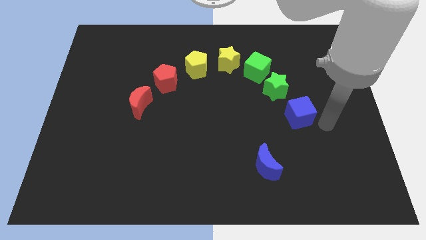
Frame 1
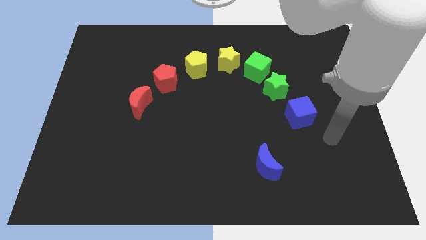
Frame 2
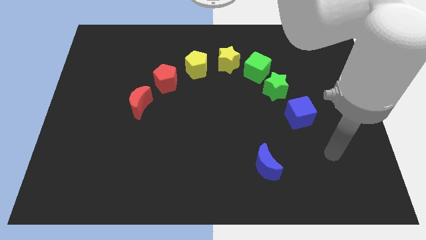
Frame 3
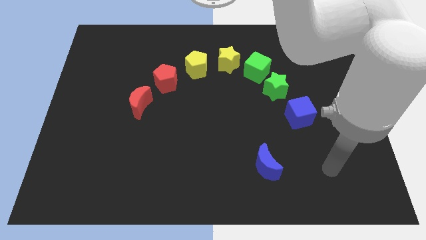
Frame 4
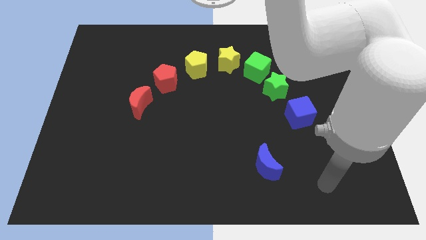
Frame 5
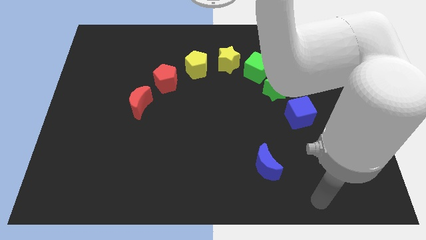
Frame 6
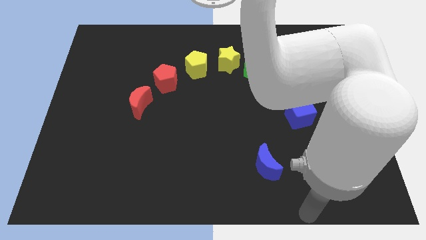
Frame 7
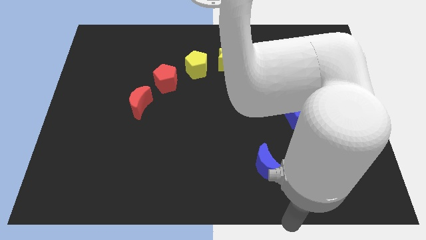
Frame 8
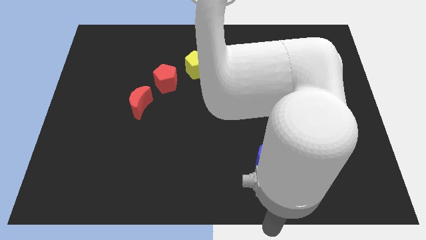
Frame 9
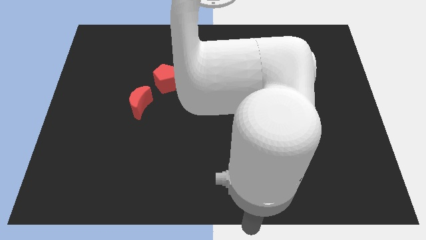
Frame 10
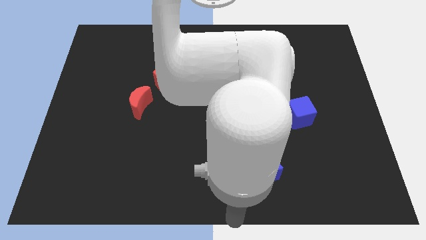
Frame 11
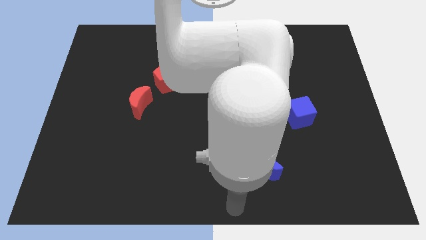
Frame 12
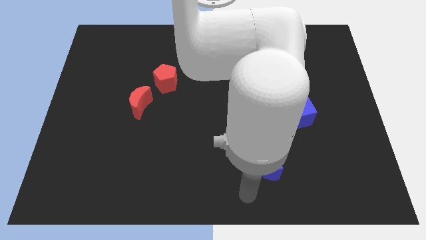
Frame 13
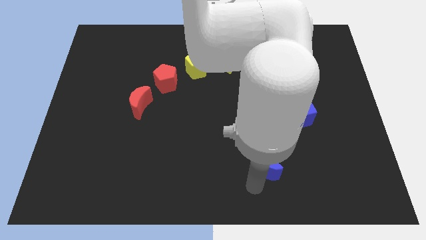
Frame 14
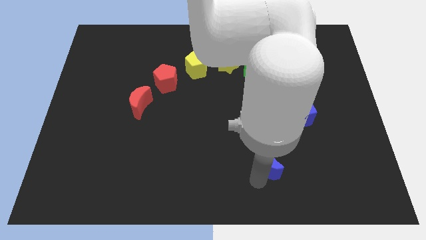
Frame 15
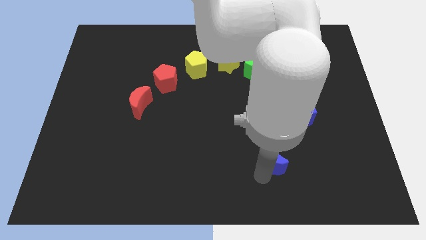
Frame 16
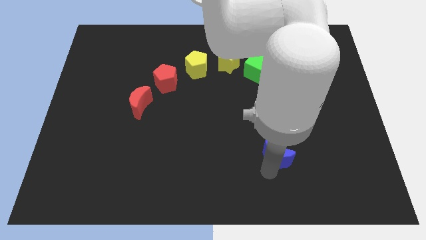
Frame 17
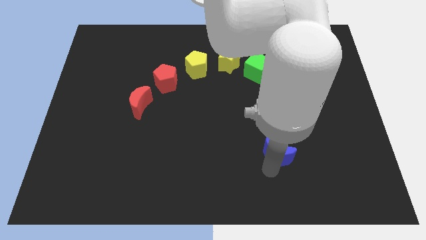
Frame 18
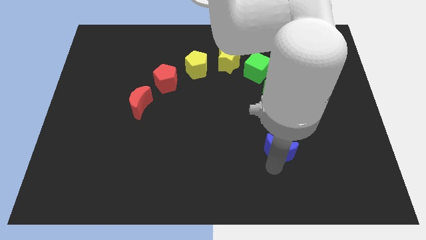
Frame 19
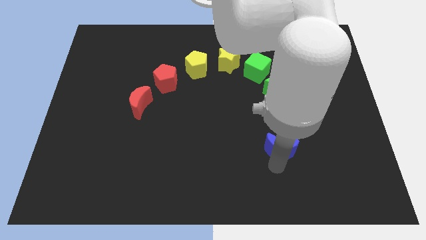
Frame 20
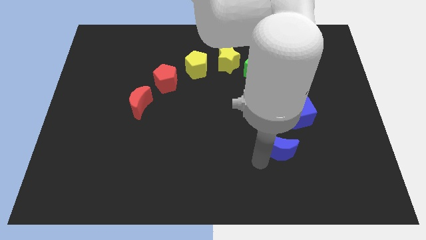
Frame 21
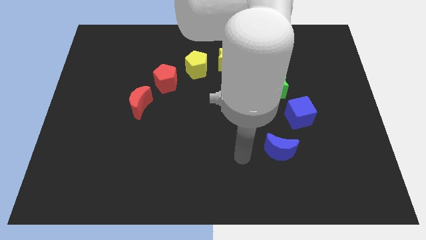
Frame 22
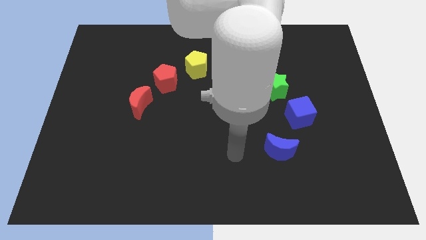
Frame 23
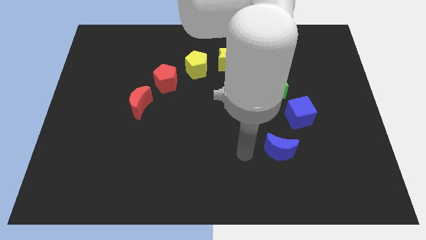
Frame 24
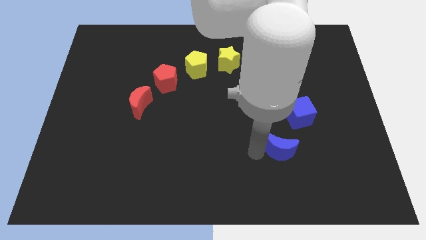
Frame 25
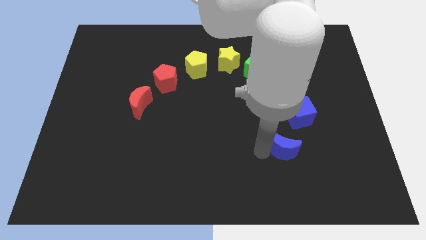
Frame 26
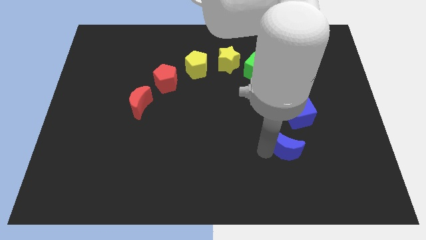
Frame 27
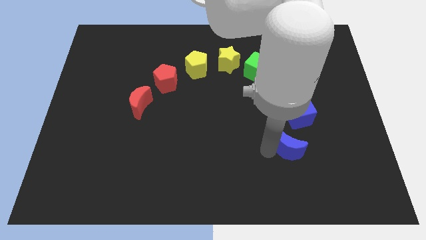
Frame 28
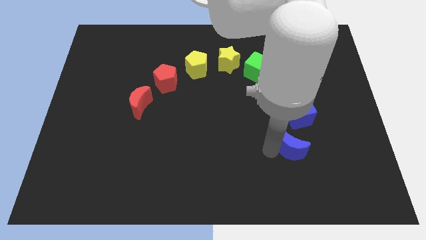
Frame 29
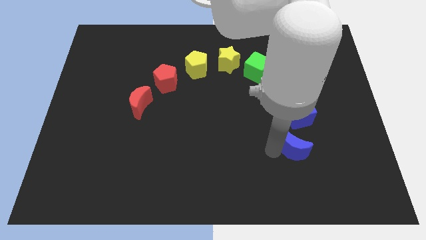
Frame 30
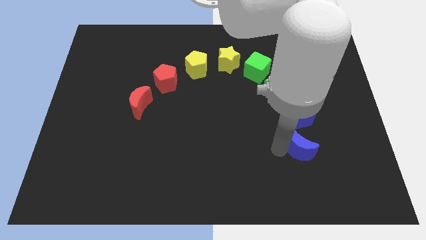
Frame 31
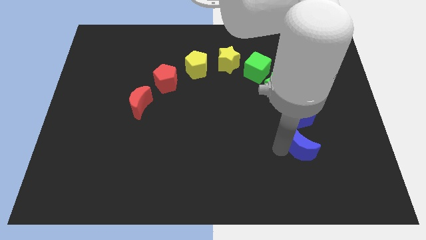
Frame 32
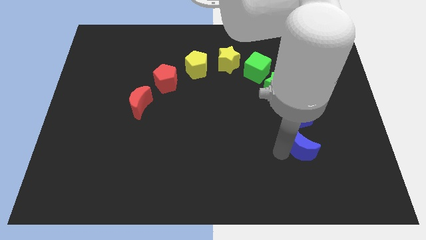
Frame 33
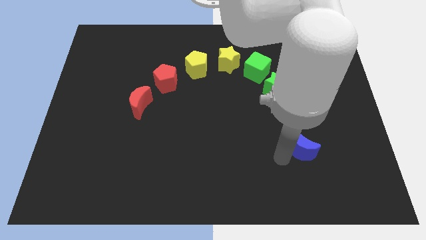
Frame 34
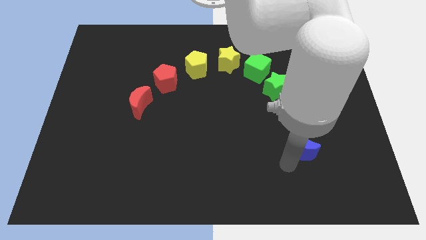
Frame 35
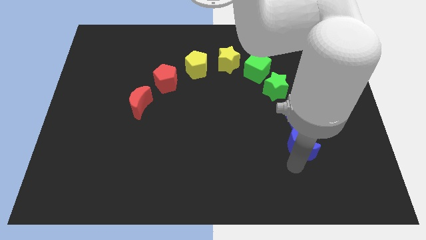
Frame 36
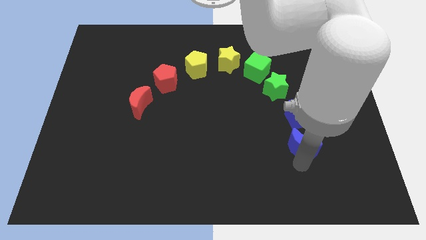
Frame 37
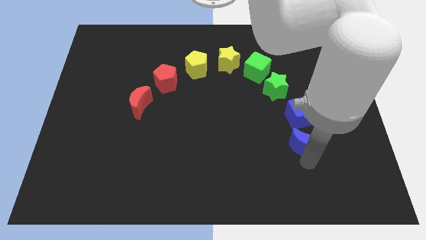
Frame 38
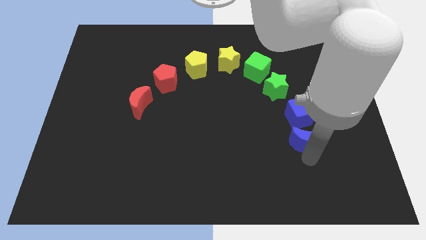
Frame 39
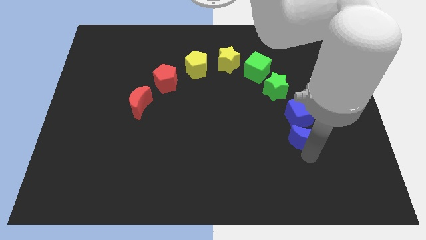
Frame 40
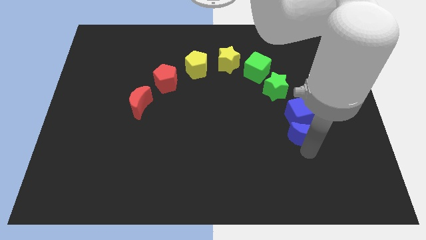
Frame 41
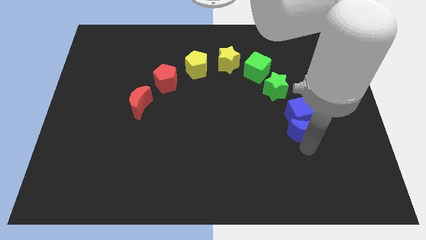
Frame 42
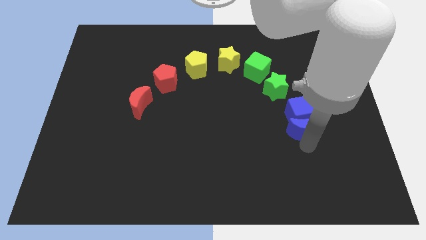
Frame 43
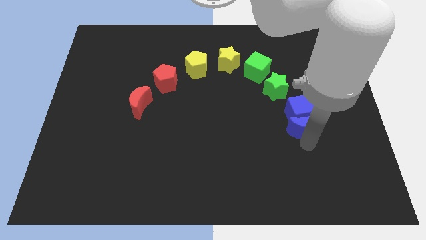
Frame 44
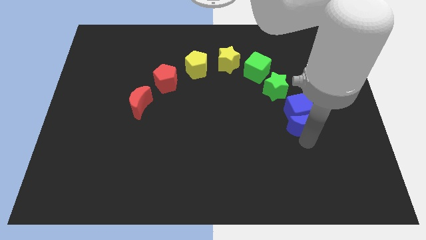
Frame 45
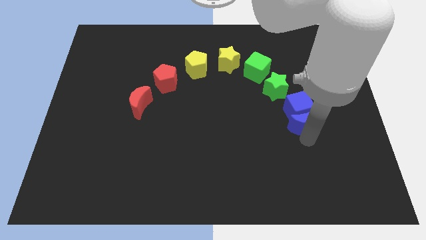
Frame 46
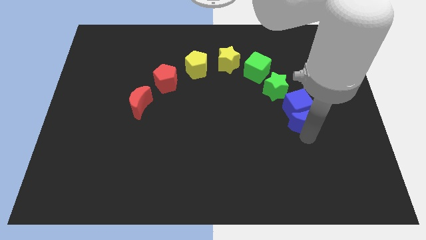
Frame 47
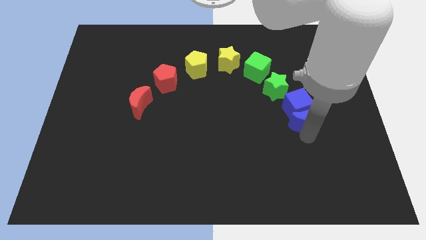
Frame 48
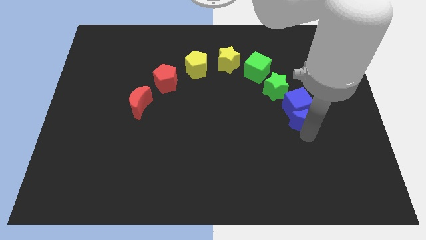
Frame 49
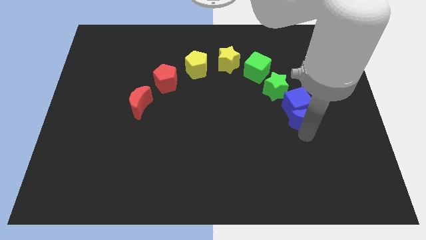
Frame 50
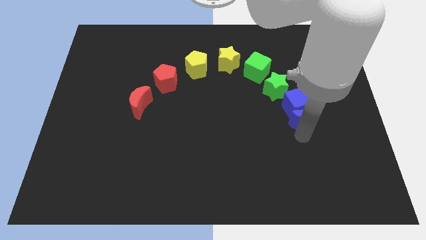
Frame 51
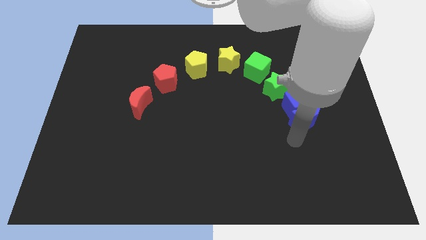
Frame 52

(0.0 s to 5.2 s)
place the blue moon to bottom of the blue cube

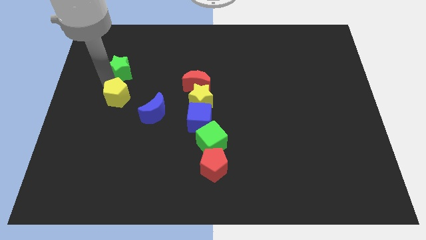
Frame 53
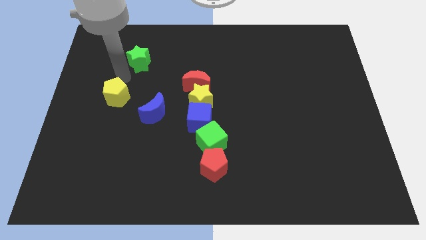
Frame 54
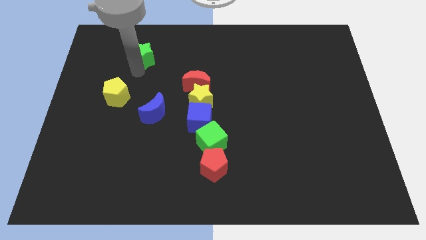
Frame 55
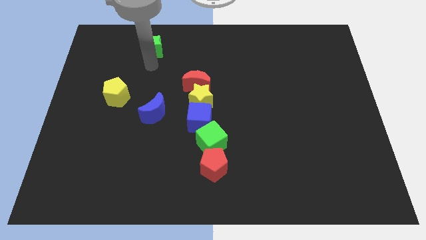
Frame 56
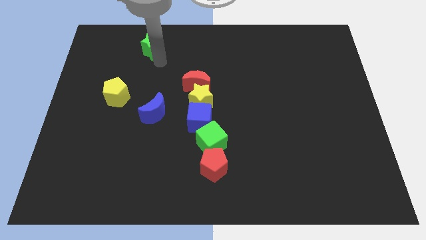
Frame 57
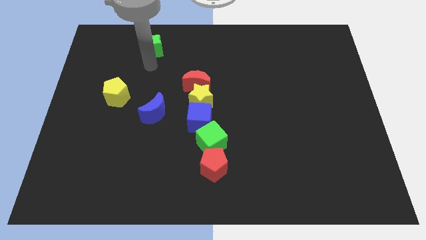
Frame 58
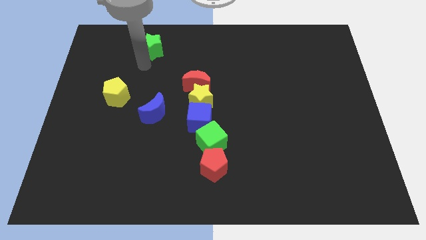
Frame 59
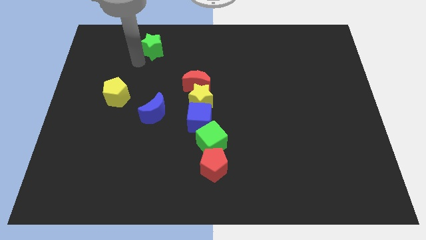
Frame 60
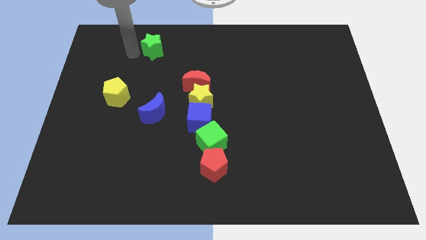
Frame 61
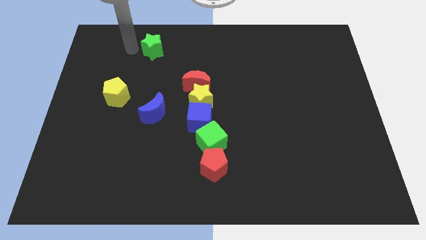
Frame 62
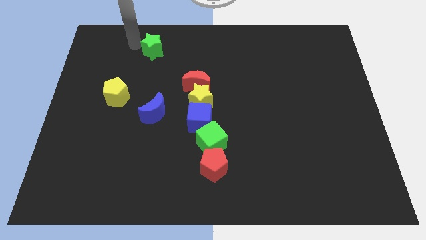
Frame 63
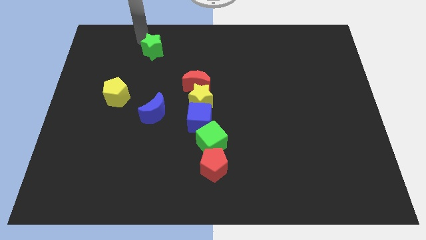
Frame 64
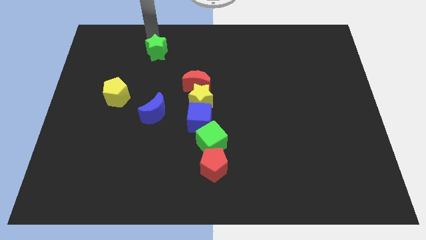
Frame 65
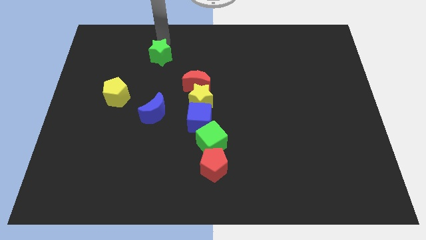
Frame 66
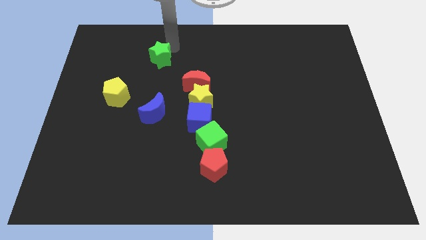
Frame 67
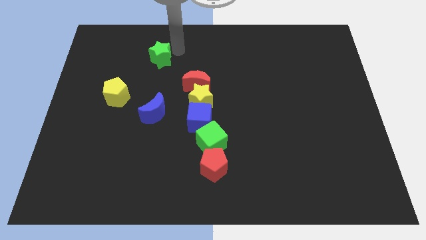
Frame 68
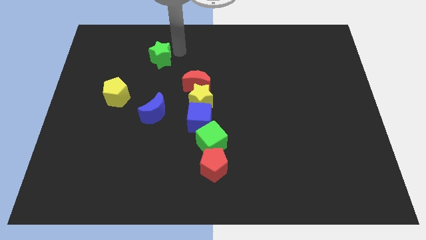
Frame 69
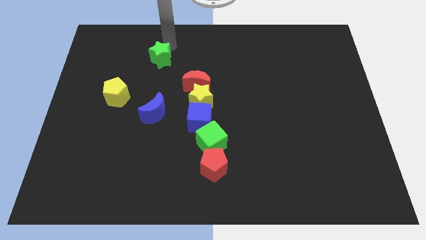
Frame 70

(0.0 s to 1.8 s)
push the green star to the top of blue crescent

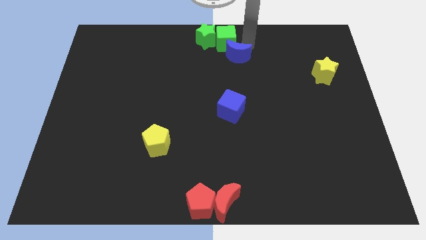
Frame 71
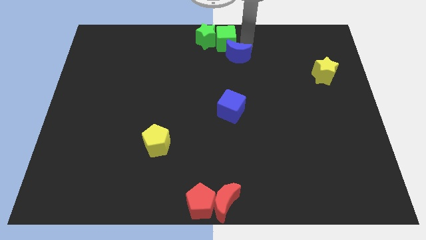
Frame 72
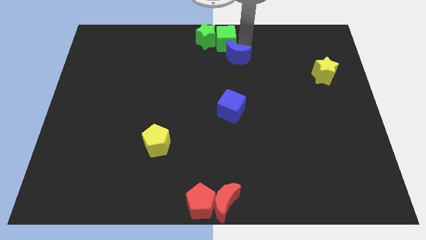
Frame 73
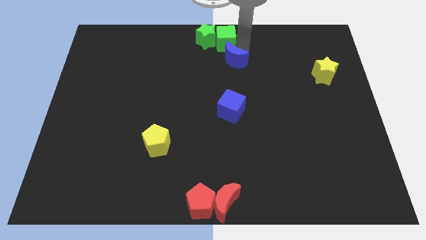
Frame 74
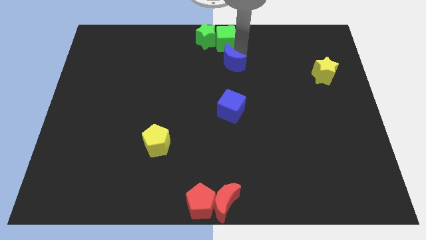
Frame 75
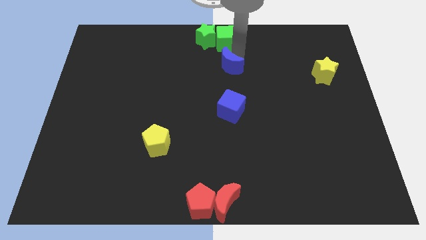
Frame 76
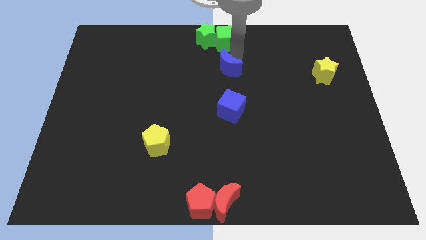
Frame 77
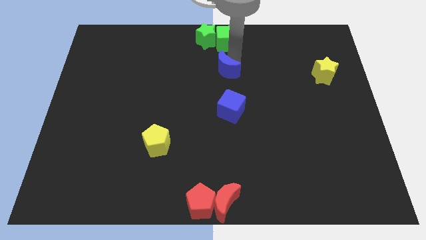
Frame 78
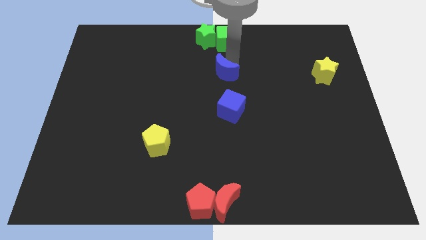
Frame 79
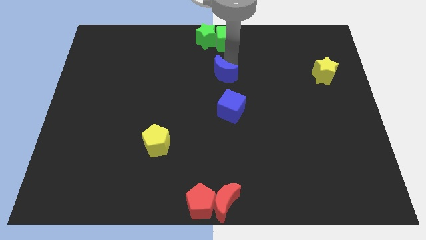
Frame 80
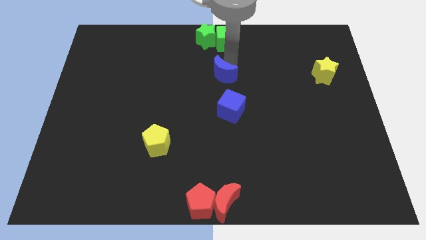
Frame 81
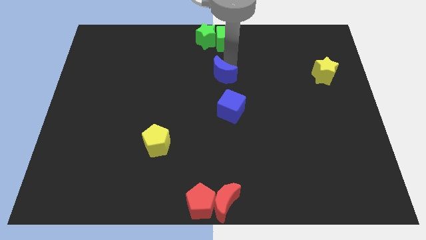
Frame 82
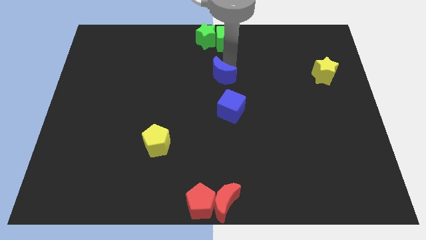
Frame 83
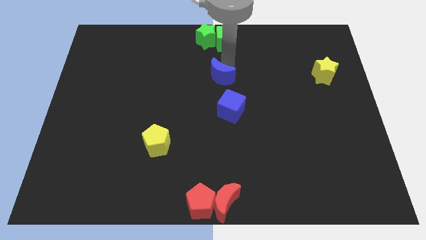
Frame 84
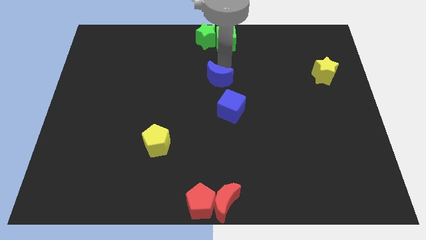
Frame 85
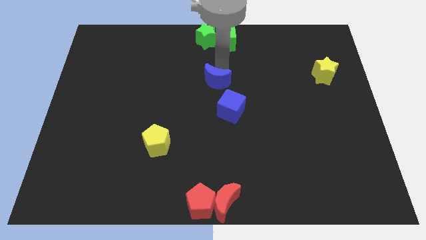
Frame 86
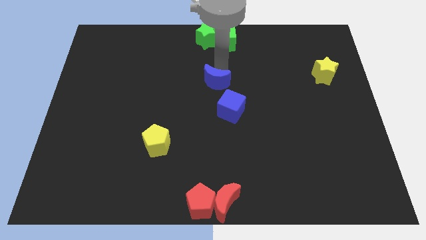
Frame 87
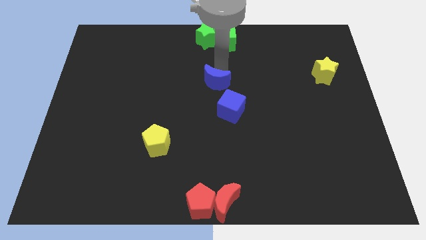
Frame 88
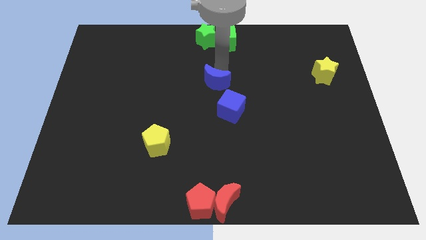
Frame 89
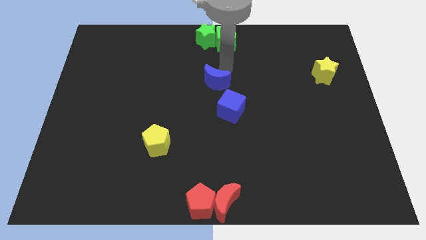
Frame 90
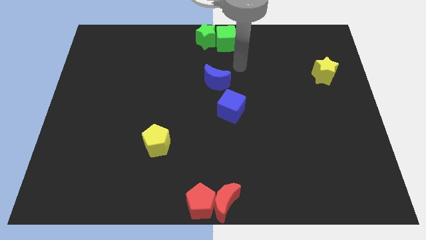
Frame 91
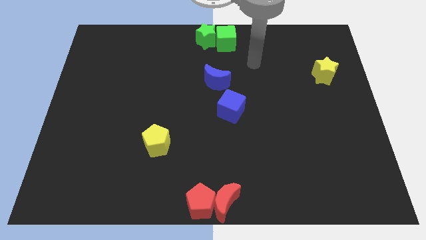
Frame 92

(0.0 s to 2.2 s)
move the blue moon away from the green cube
